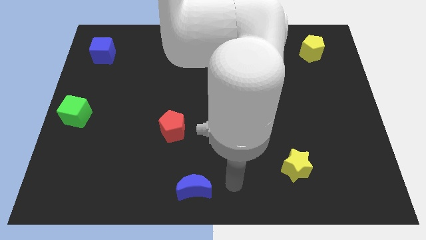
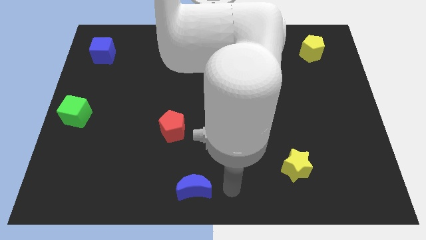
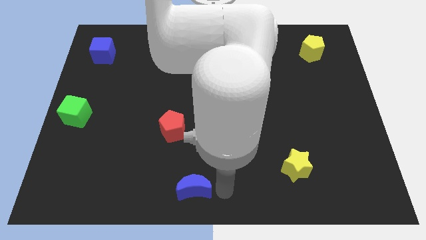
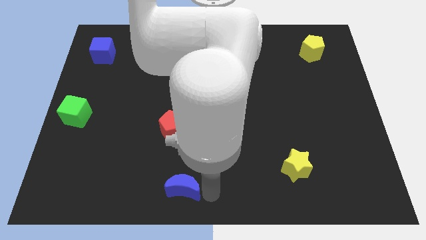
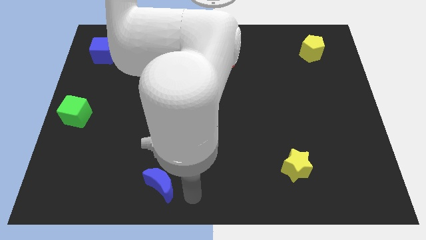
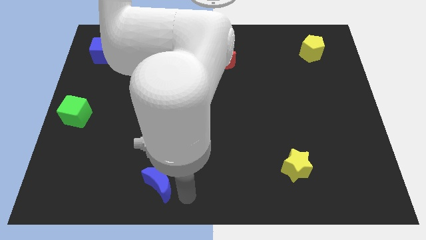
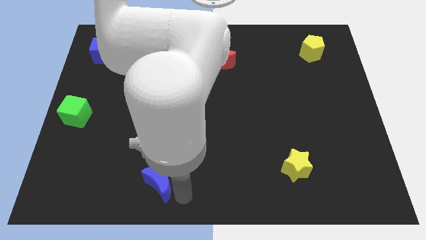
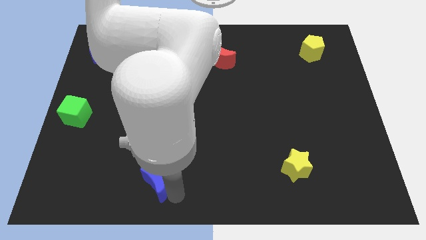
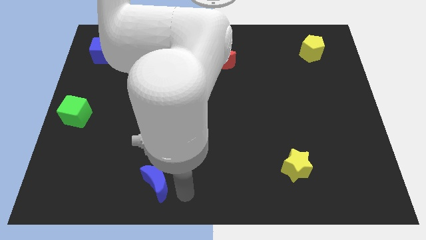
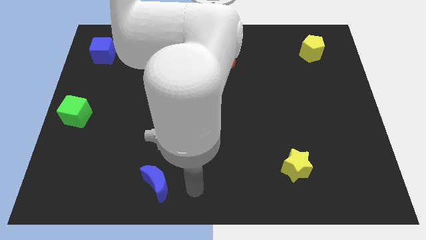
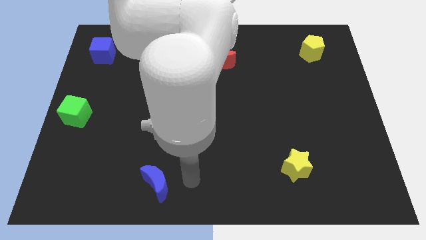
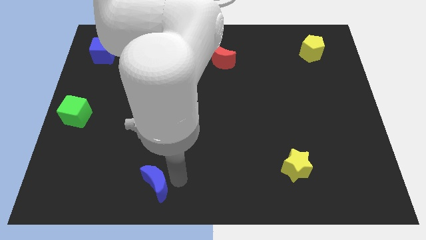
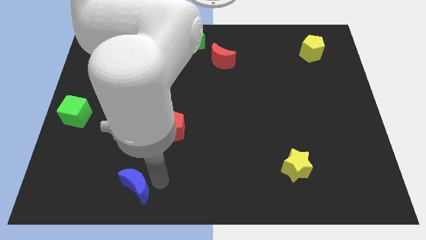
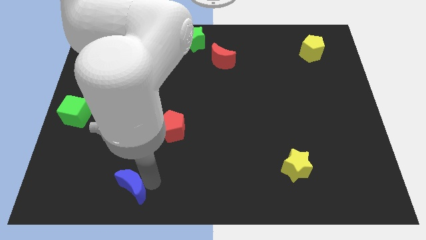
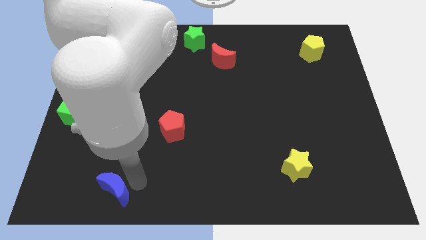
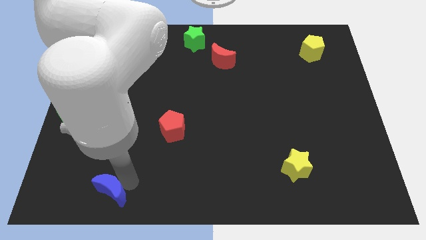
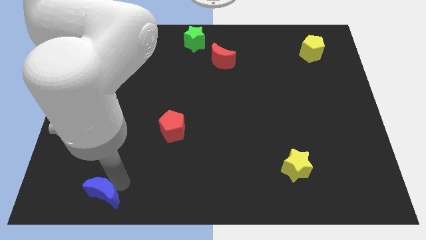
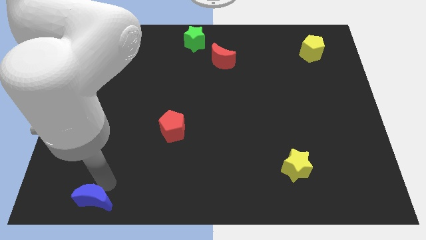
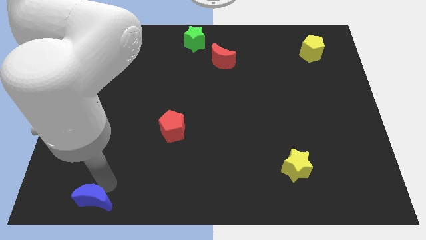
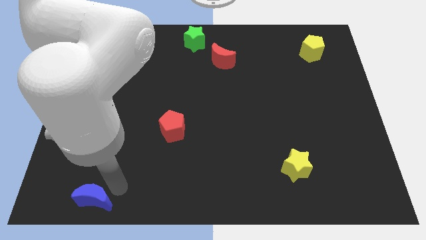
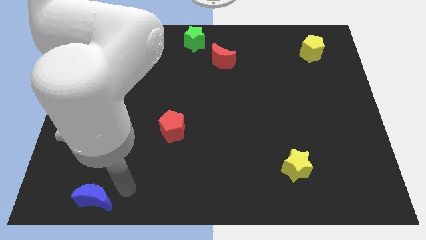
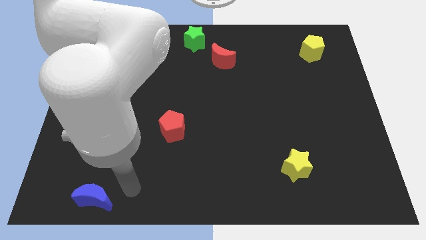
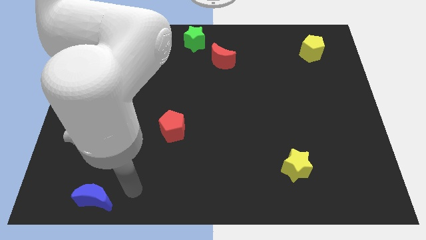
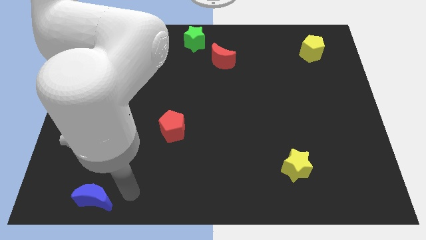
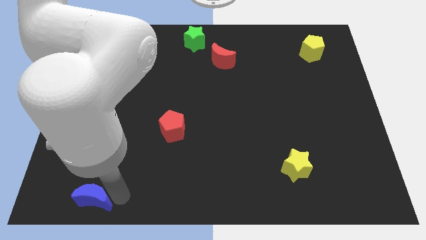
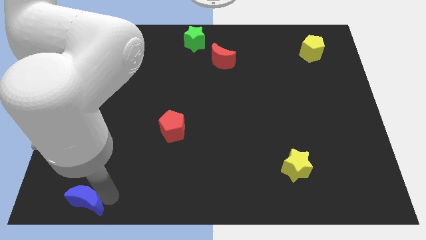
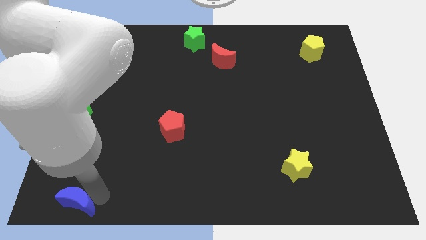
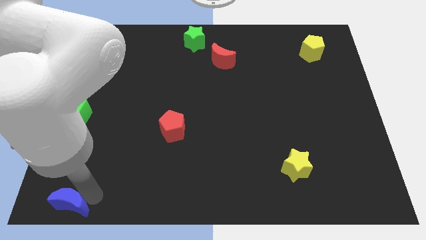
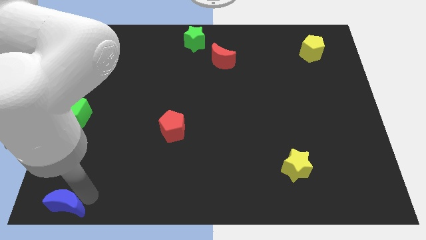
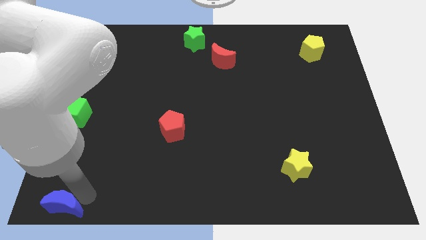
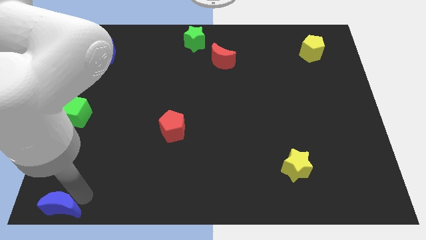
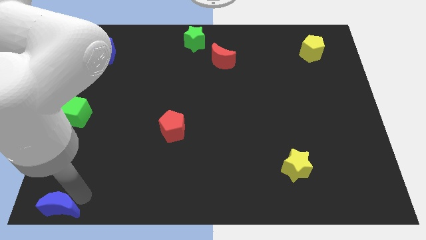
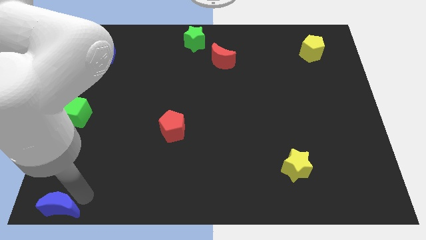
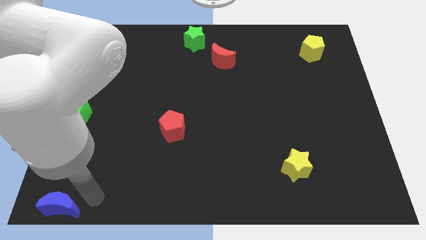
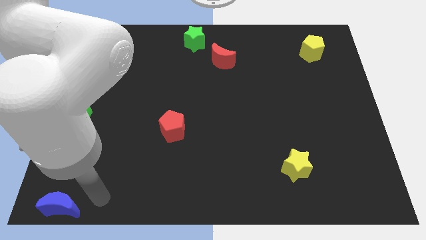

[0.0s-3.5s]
put the blue moon at the bottom left corner of the board

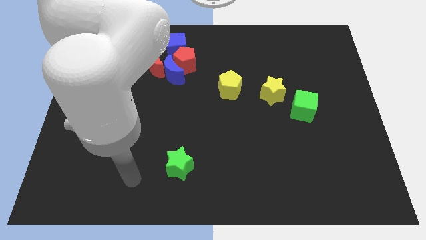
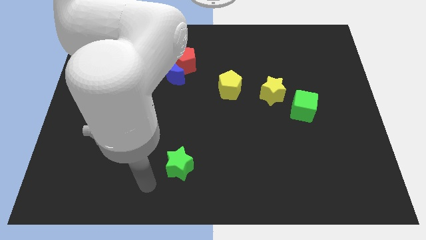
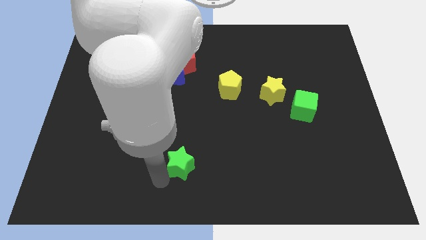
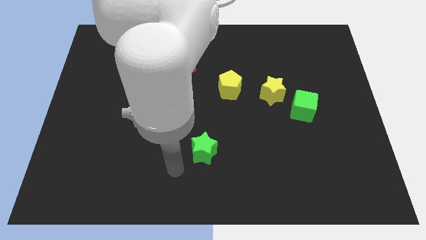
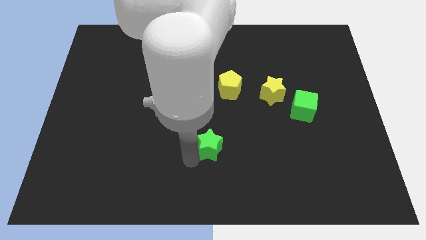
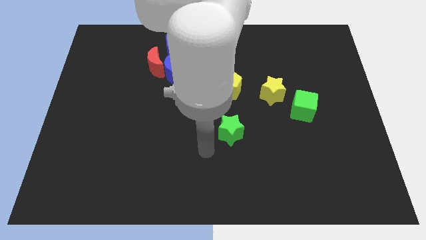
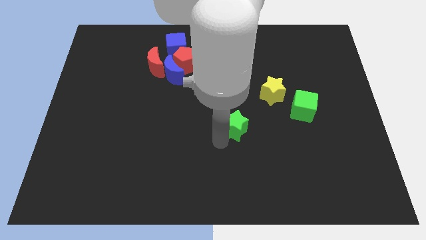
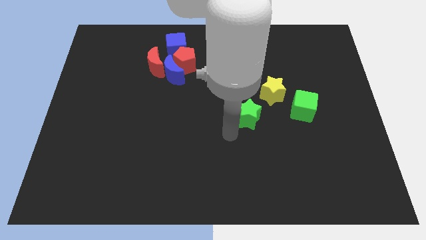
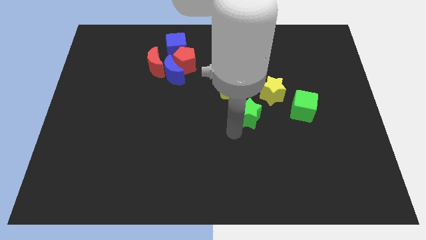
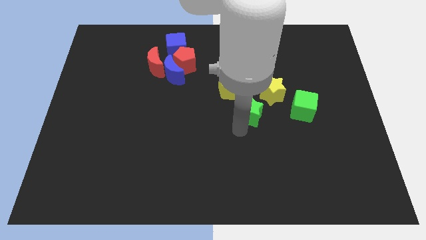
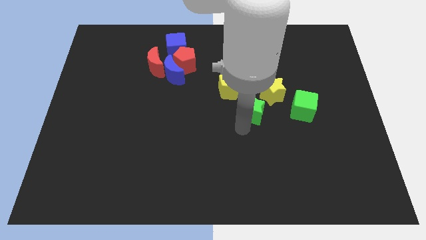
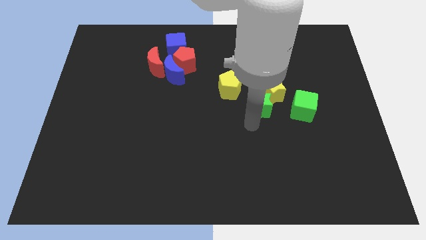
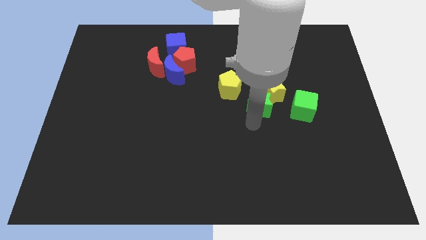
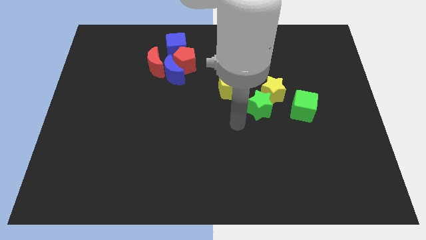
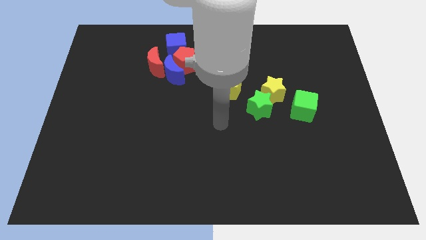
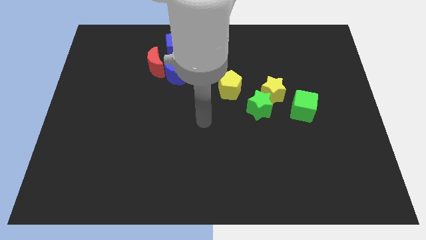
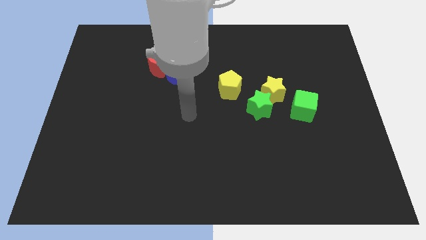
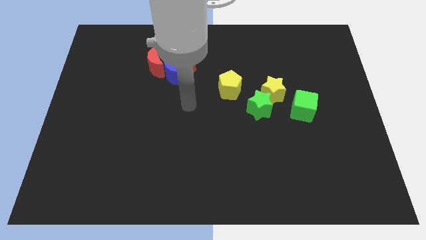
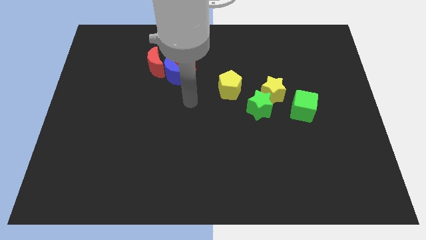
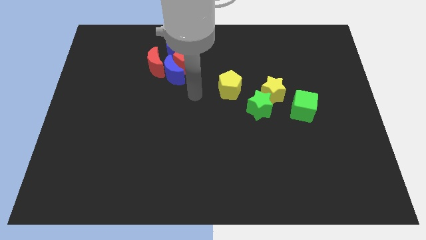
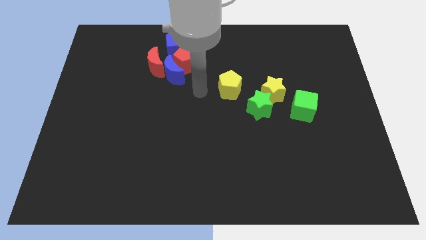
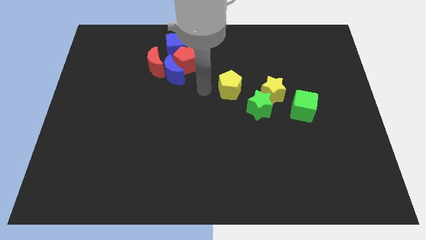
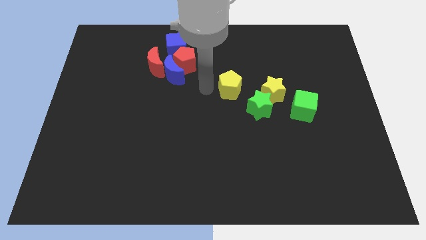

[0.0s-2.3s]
push the green star into the yellow star

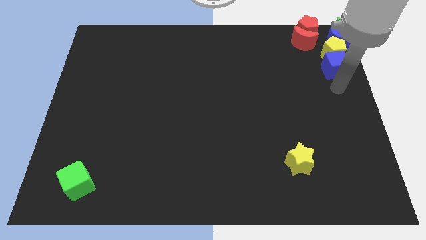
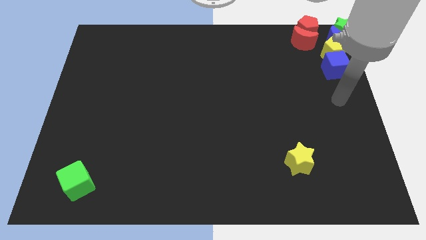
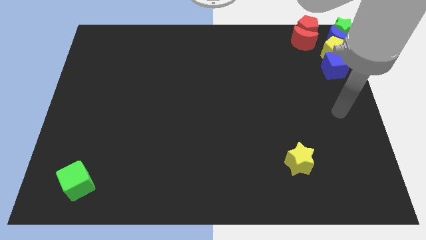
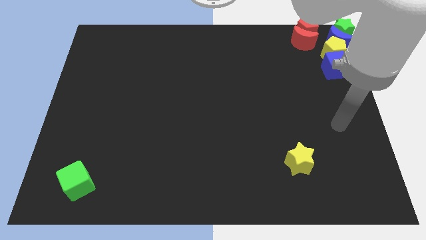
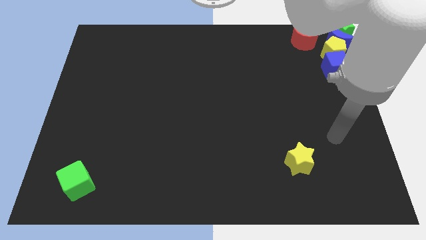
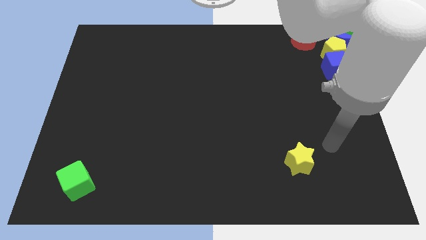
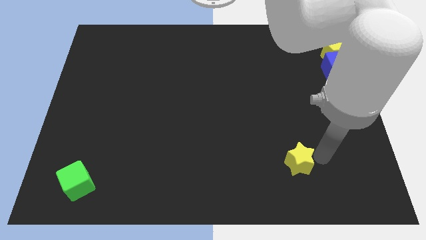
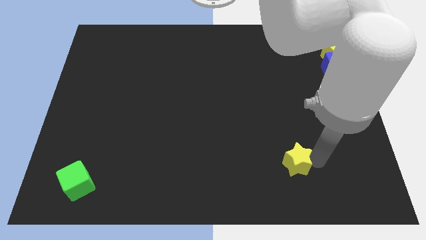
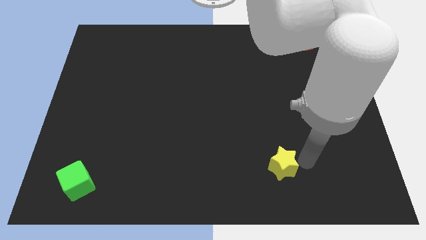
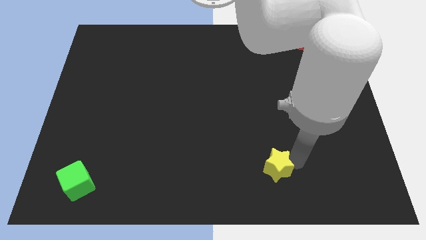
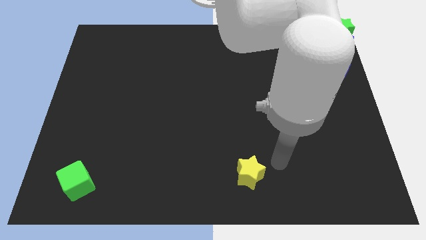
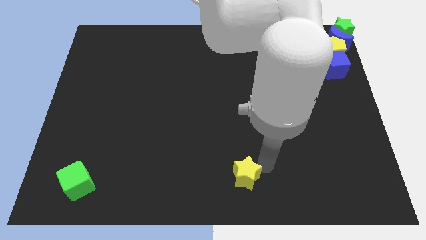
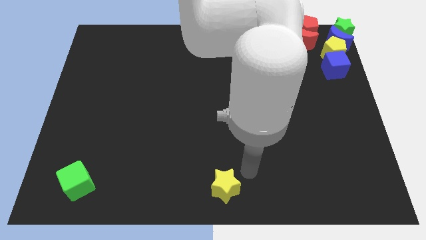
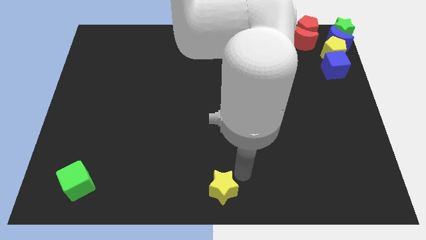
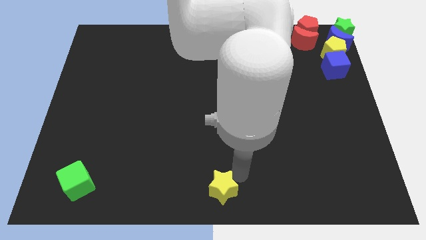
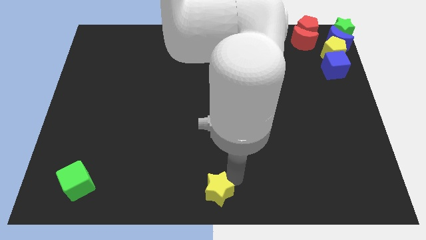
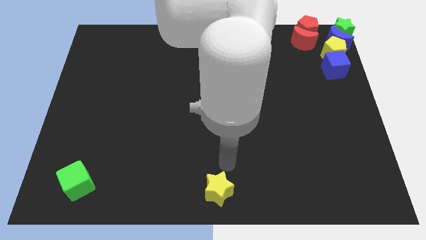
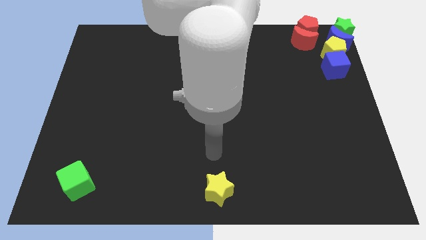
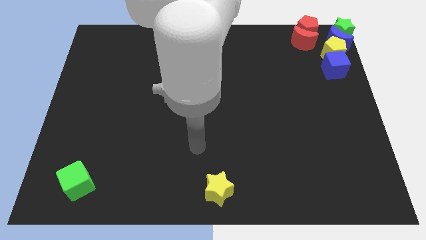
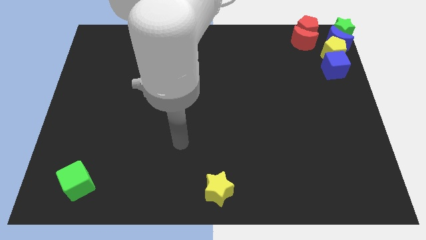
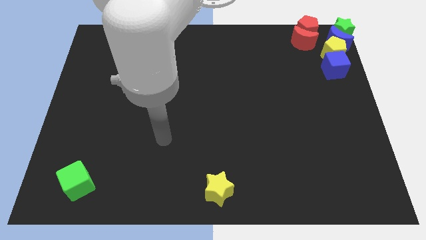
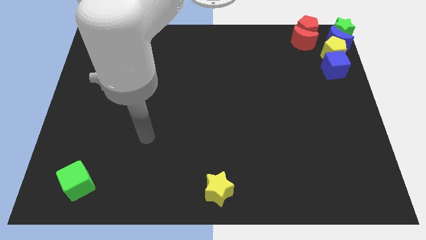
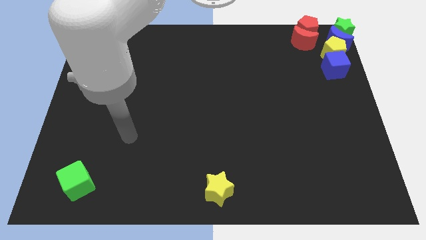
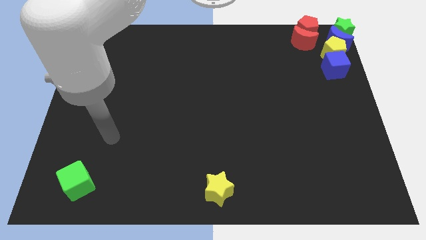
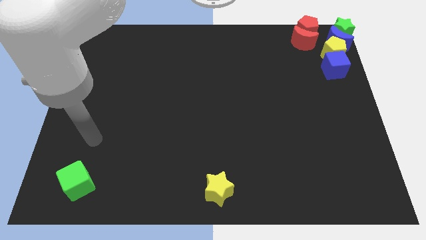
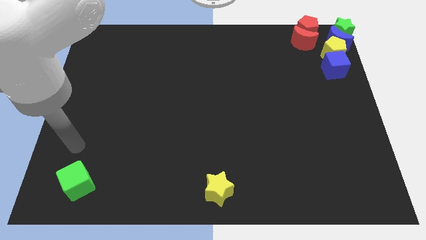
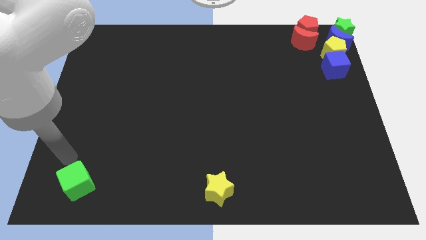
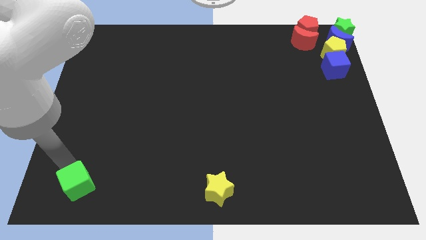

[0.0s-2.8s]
move the yellow star to the bottom center

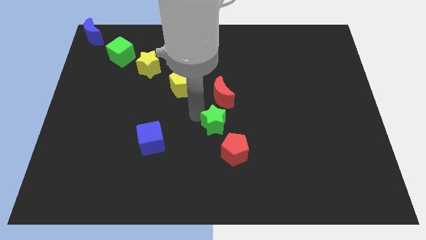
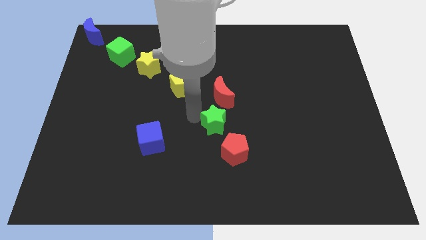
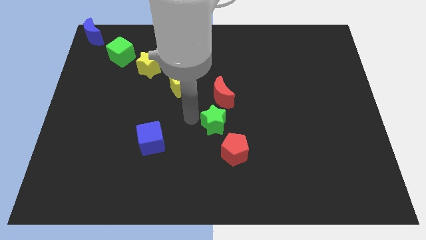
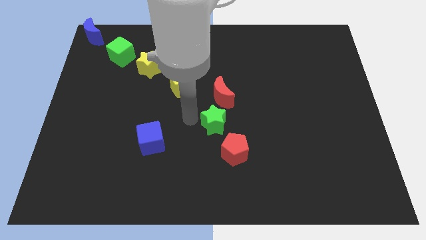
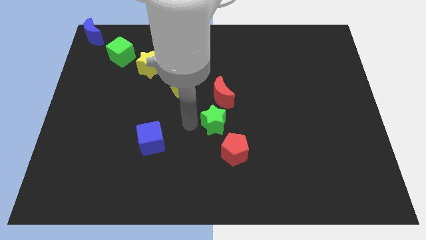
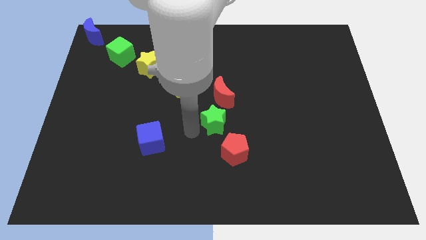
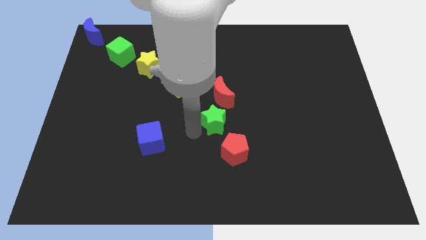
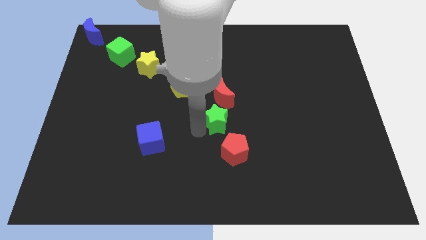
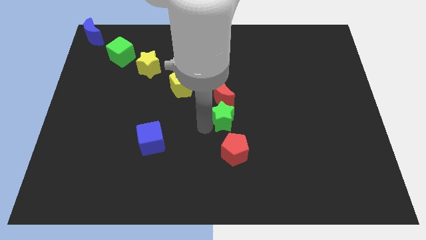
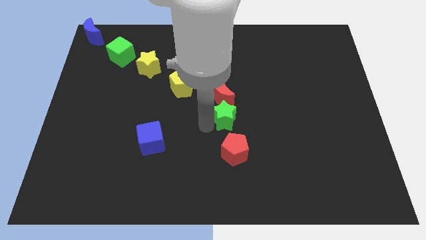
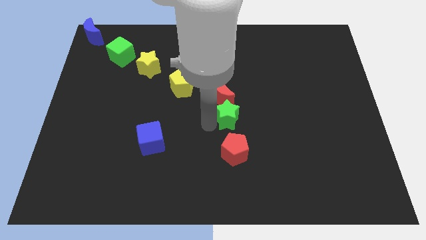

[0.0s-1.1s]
place the green star to the bottom of the red crescent
